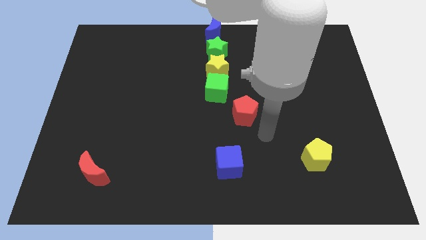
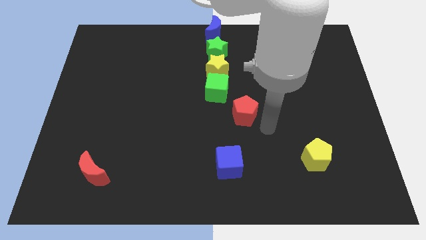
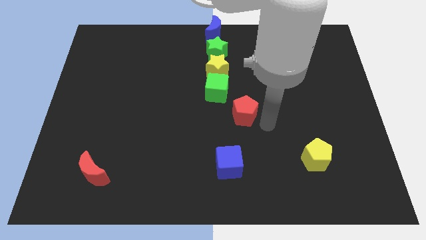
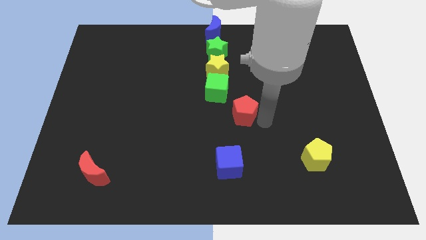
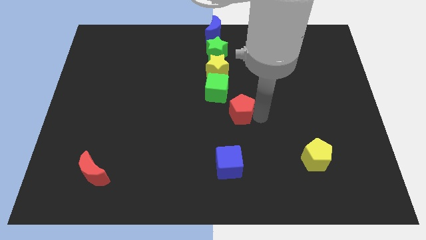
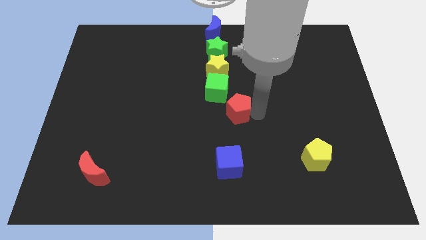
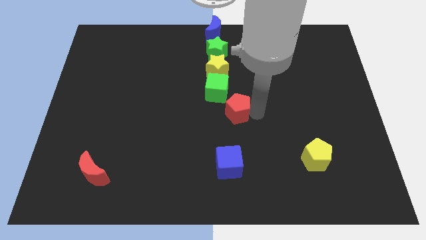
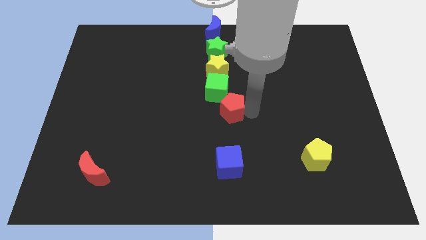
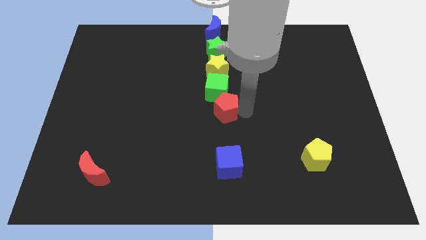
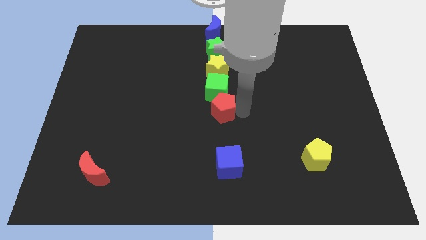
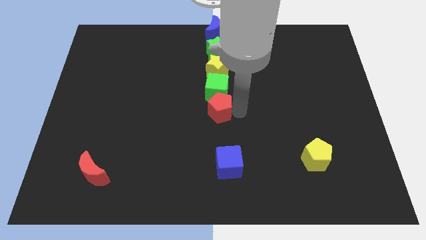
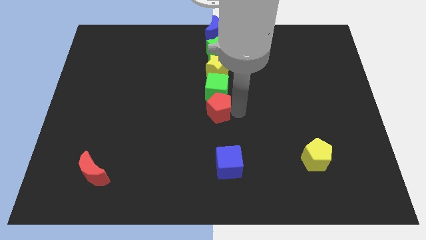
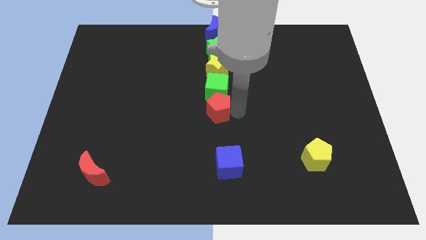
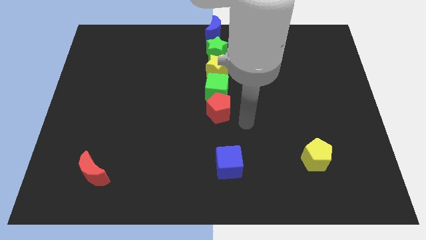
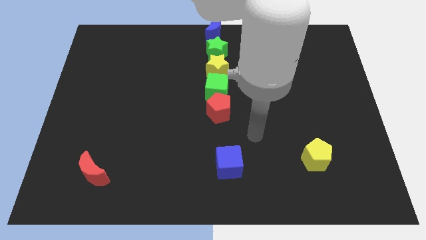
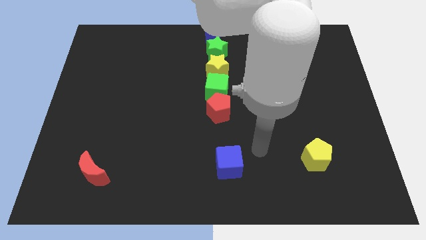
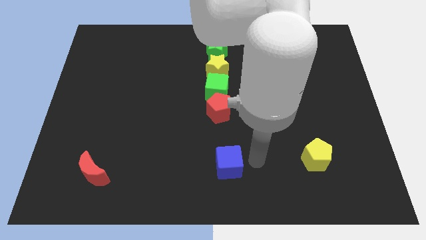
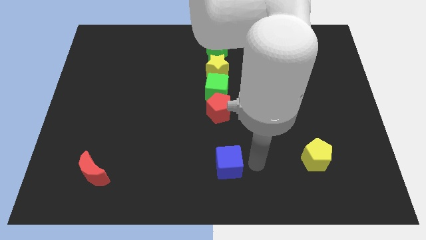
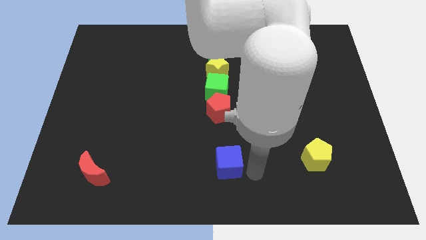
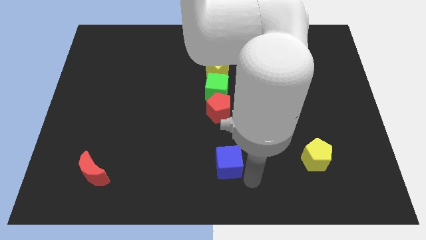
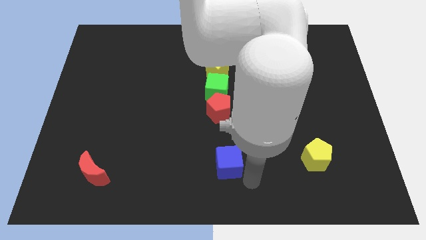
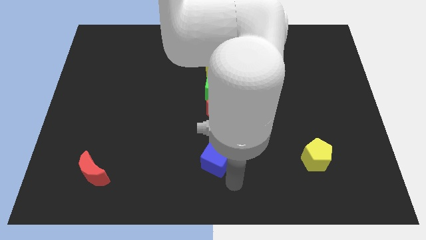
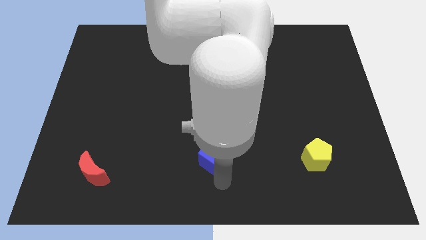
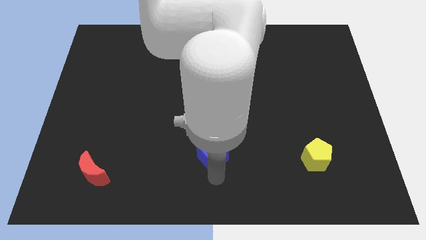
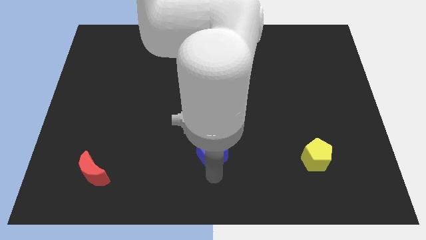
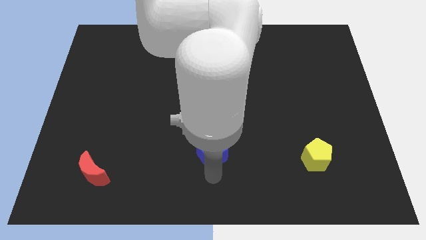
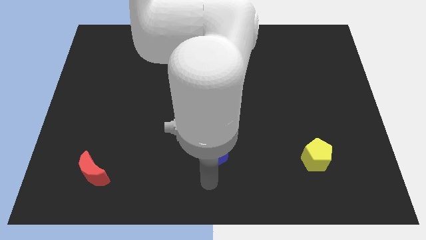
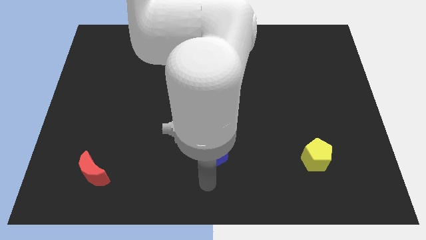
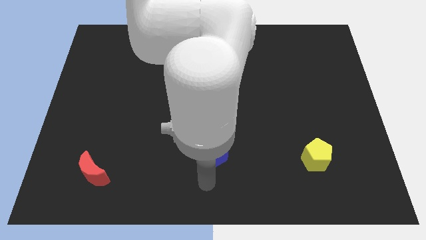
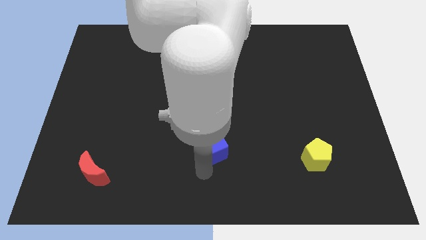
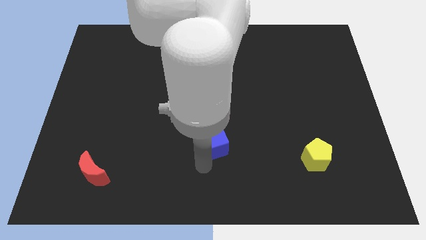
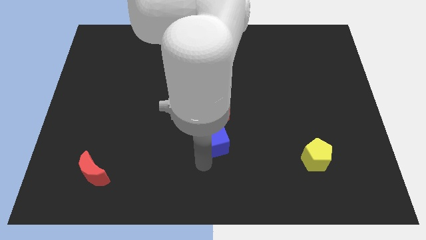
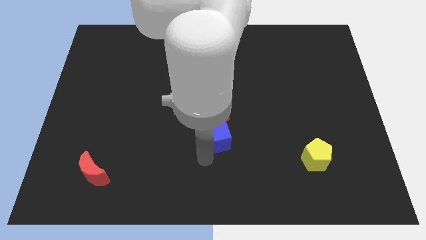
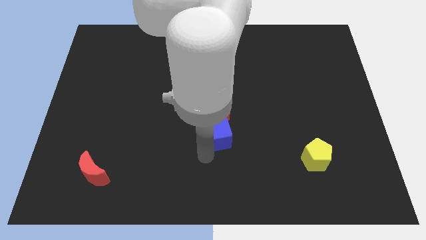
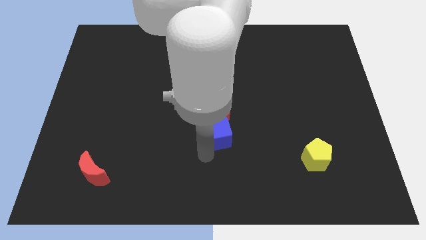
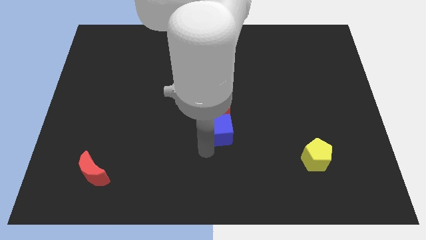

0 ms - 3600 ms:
move the red pentagon and blue cube to the center

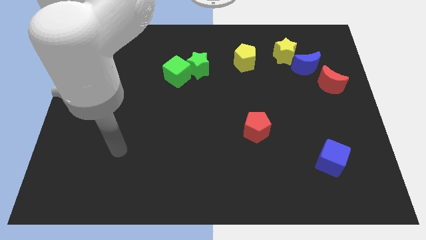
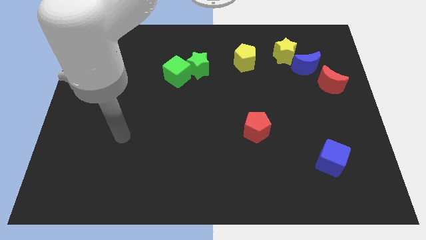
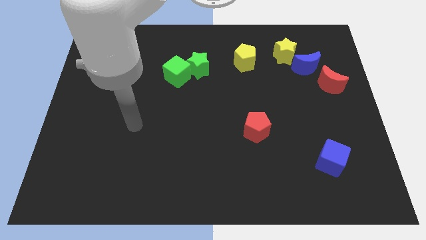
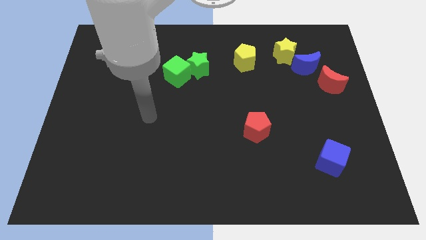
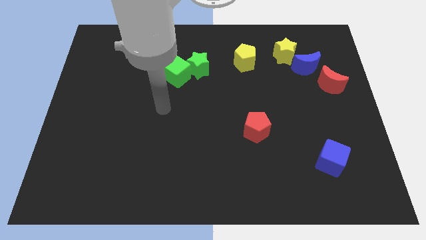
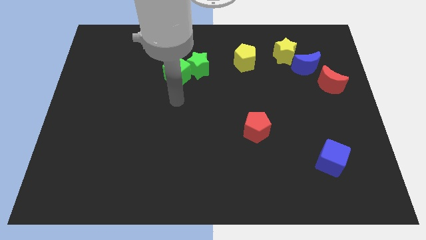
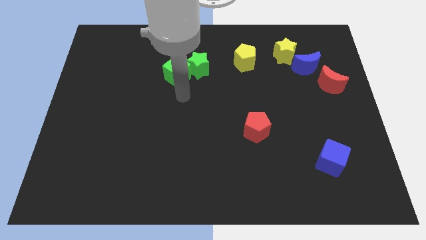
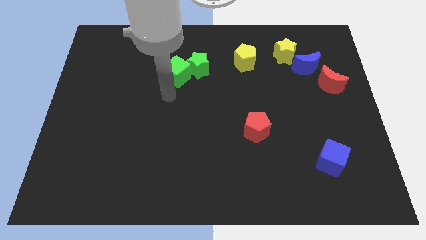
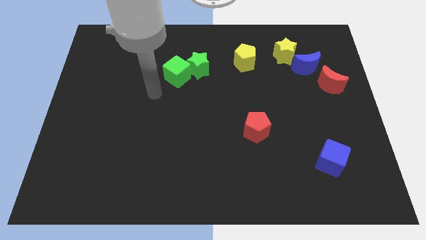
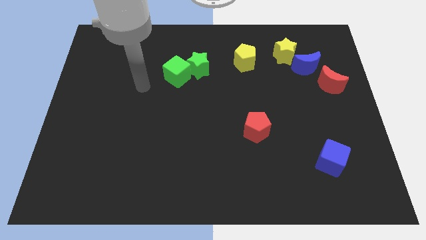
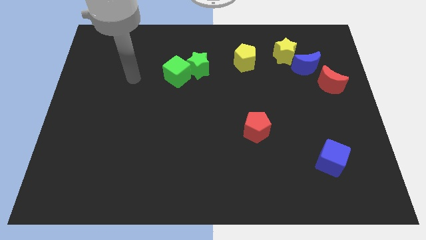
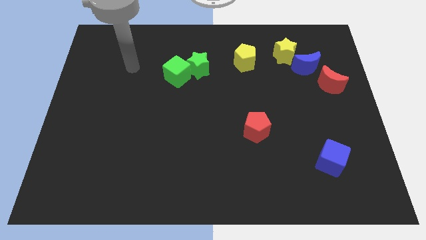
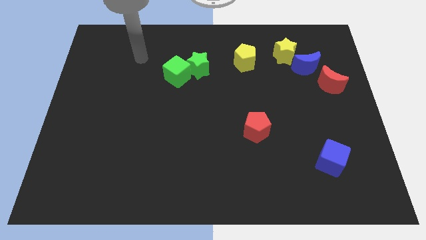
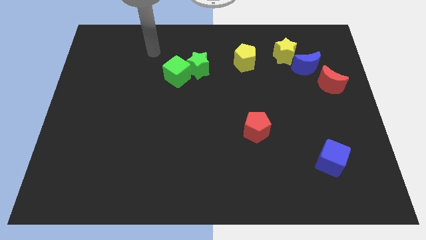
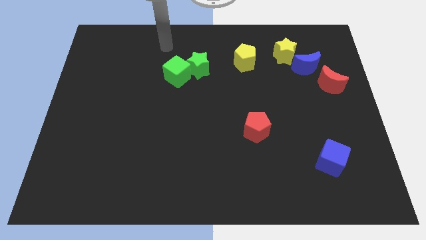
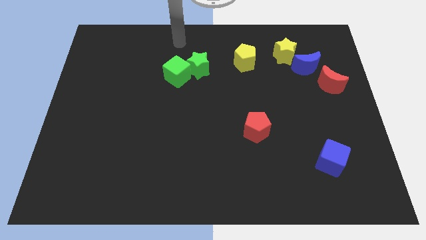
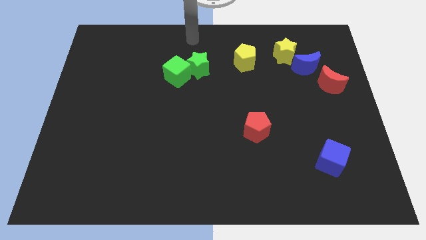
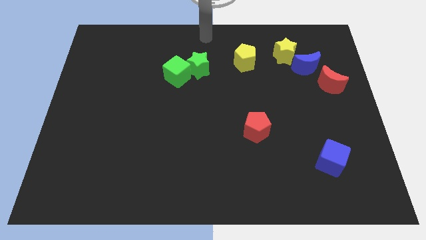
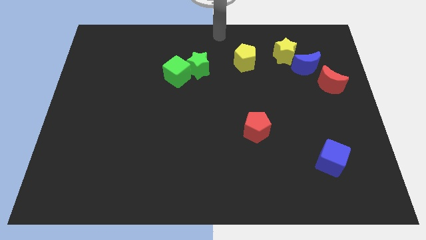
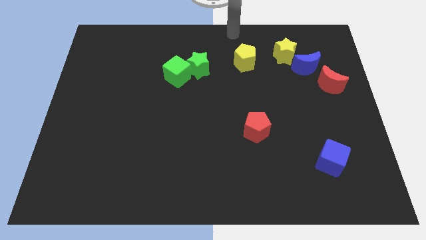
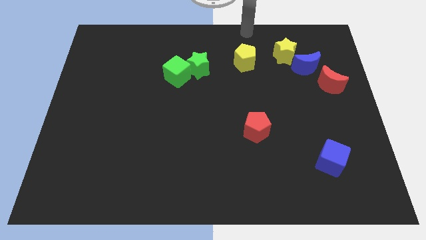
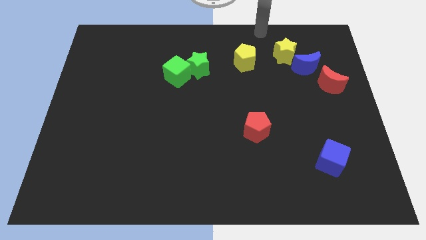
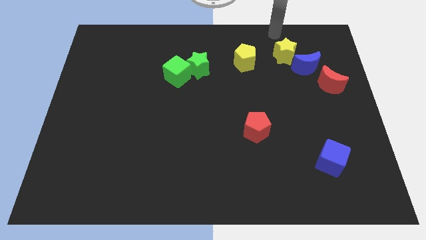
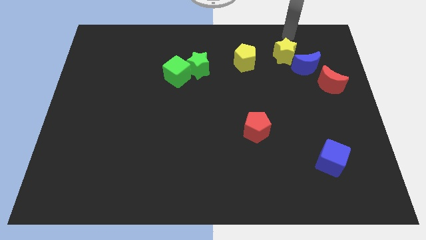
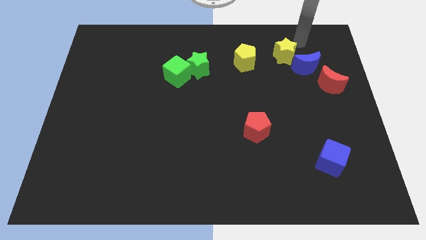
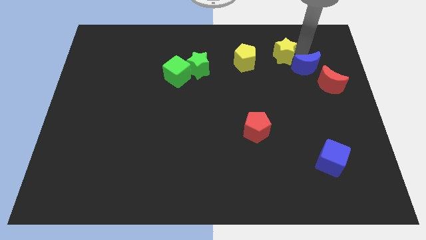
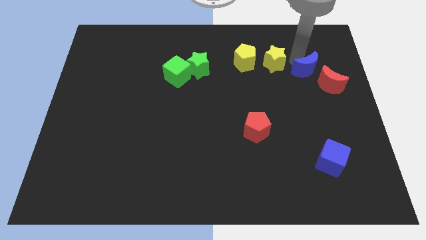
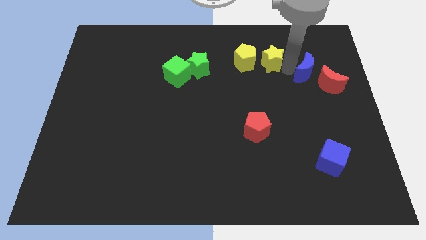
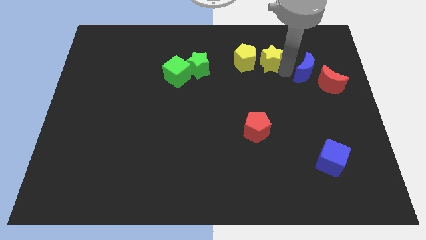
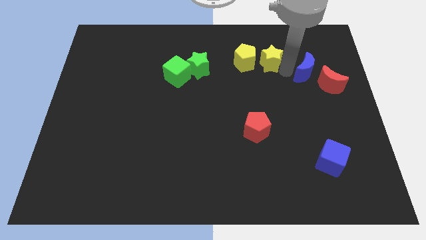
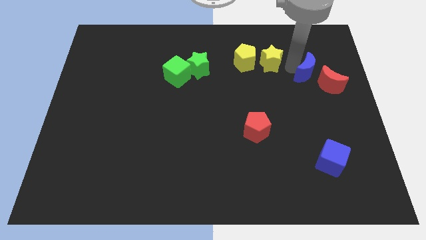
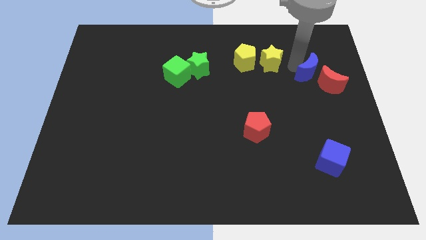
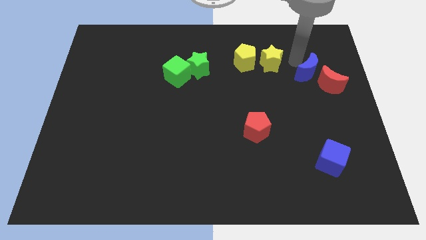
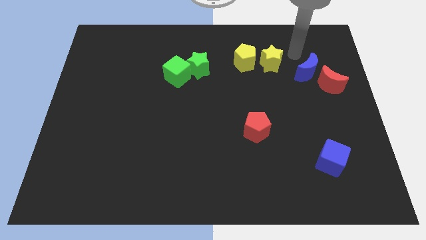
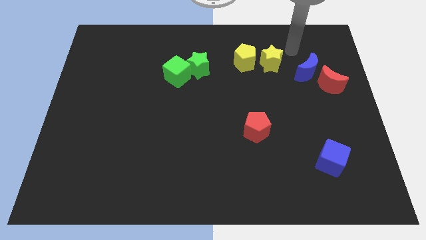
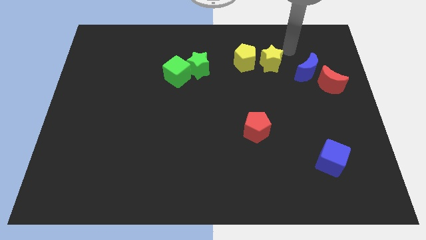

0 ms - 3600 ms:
separate the yellow star from the blue crescent

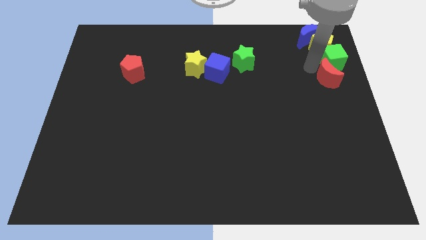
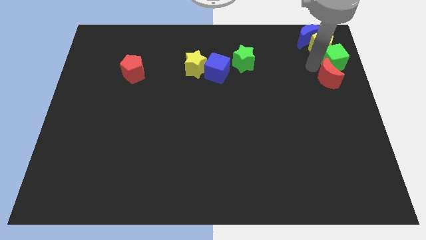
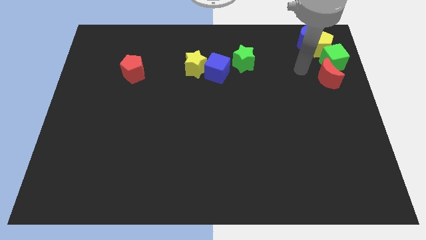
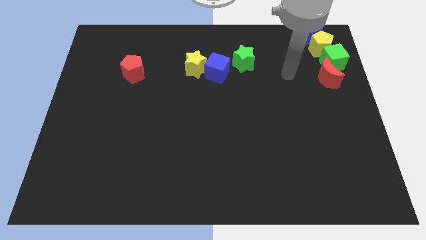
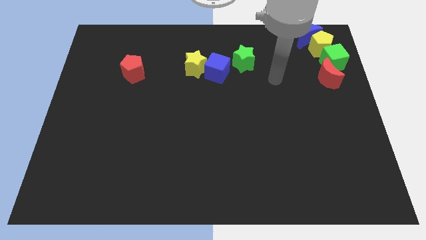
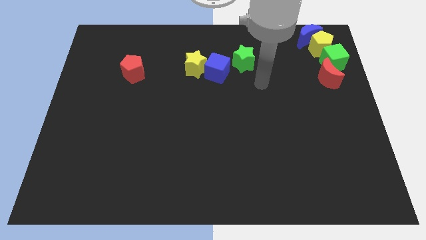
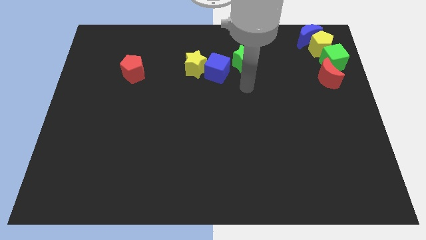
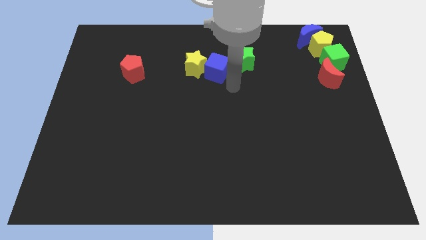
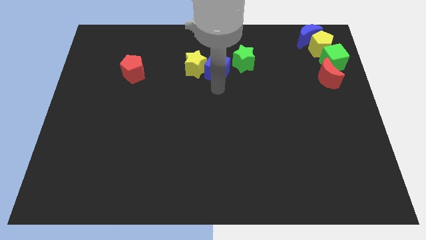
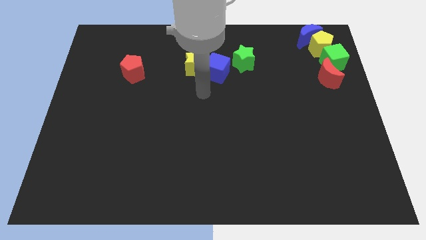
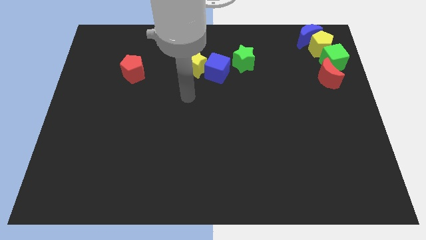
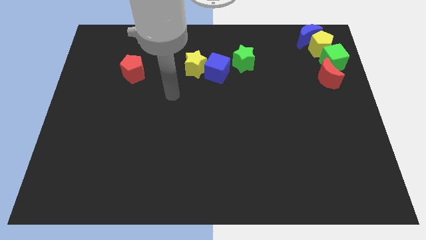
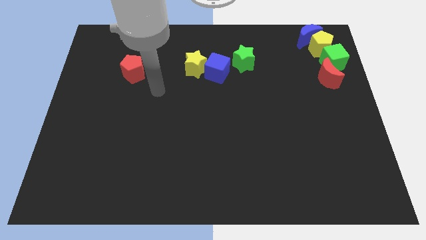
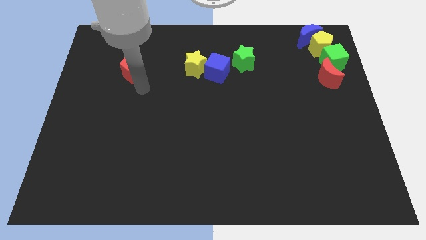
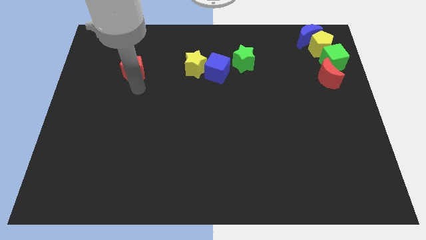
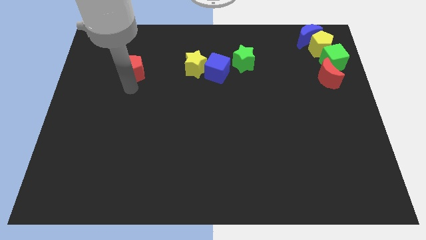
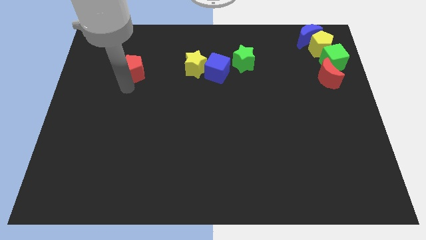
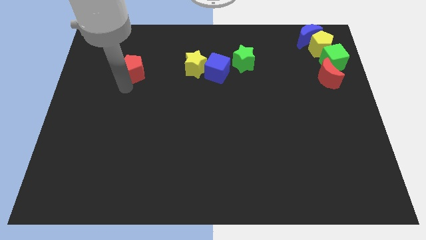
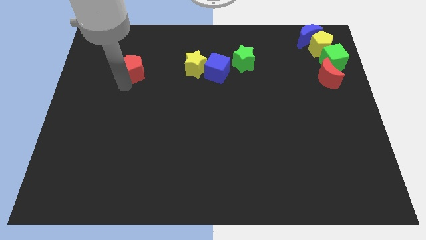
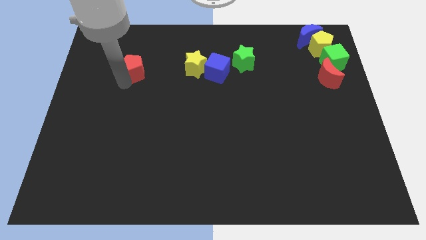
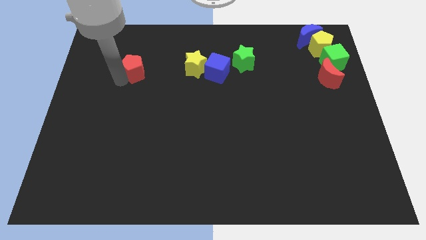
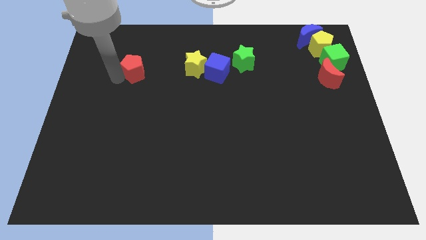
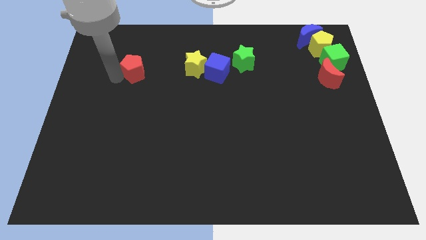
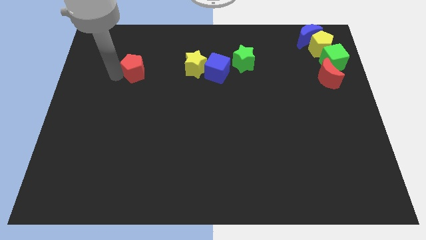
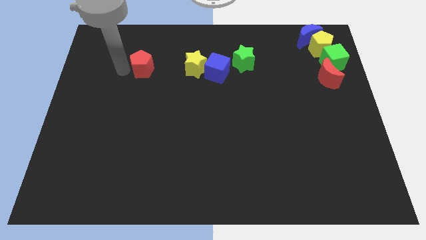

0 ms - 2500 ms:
move your arm away from green cube
